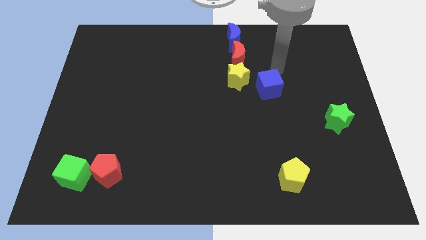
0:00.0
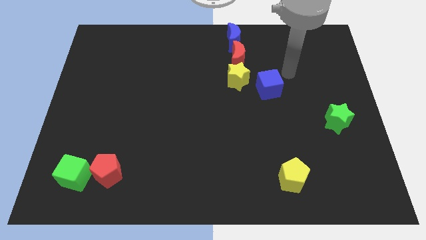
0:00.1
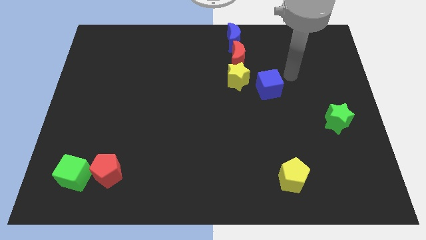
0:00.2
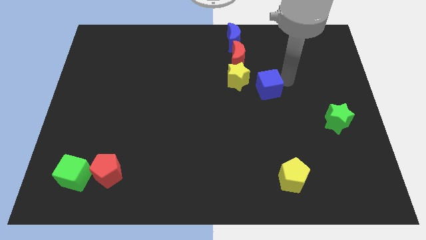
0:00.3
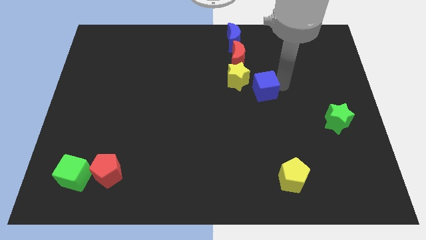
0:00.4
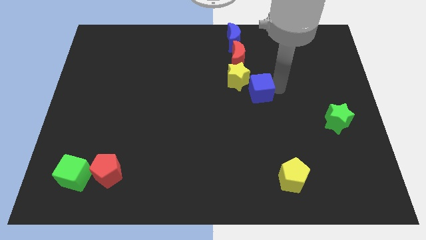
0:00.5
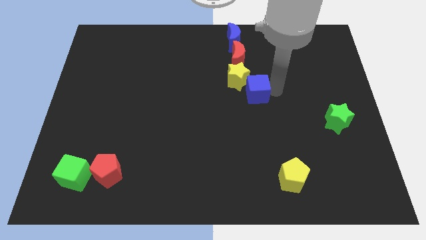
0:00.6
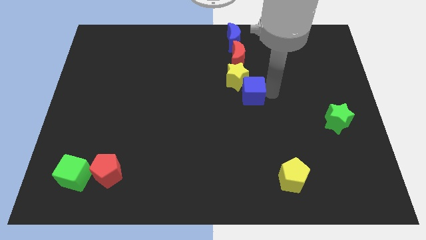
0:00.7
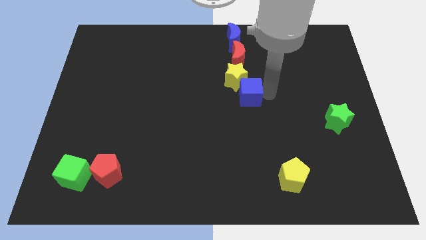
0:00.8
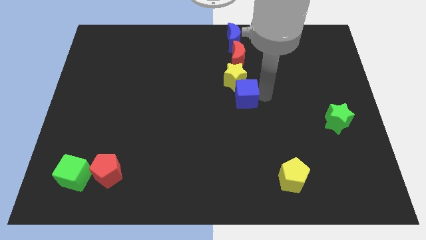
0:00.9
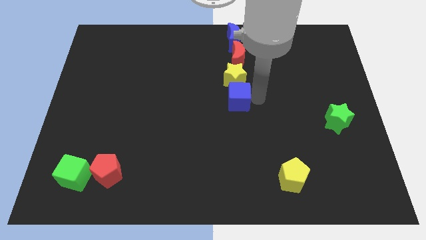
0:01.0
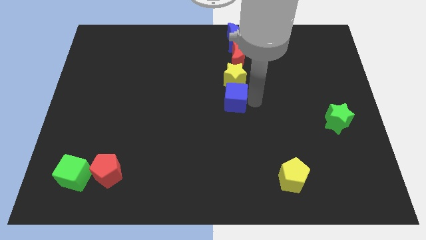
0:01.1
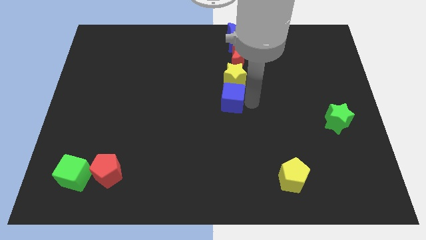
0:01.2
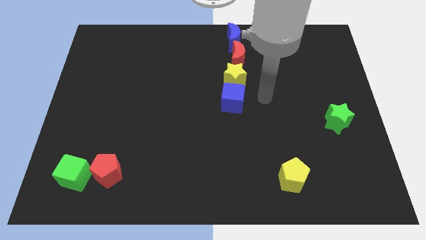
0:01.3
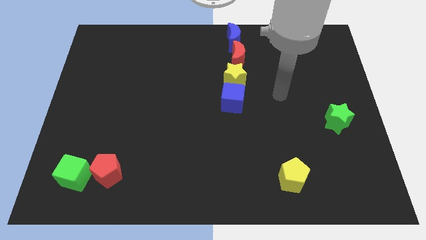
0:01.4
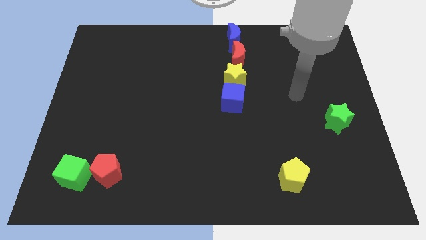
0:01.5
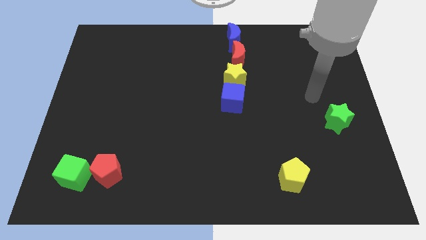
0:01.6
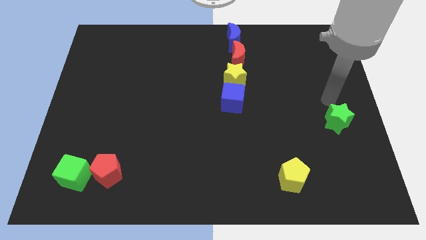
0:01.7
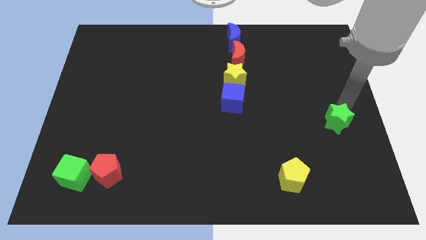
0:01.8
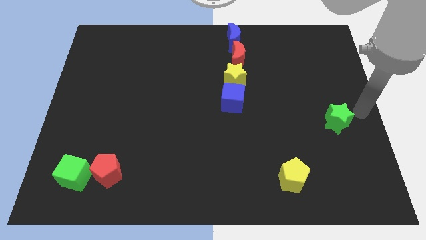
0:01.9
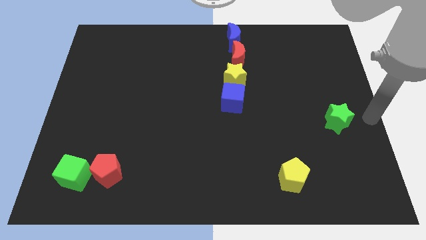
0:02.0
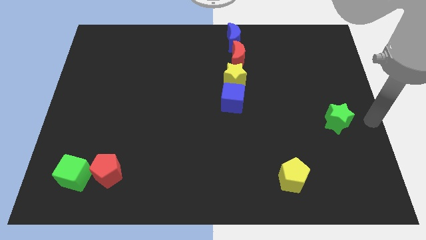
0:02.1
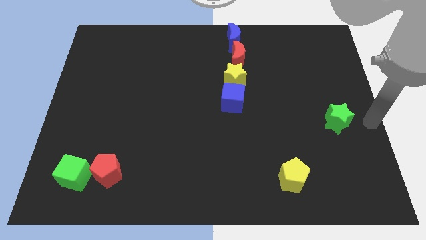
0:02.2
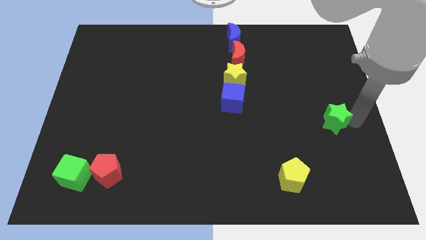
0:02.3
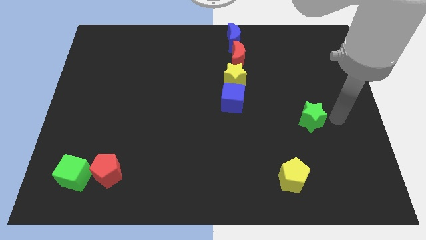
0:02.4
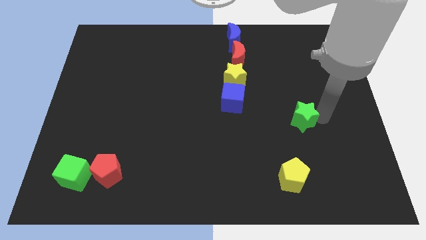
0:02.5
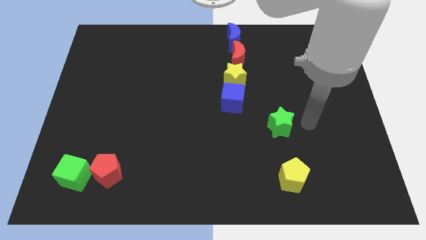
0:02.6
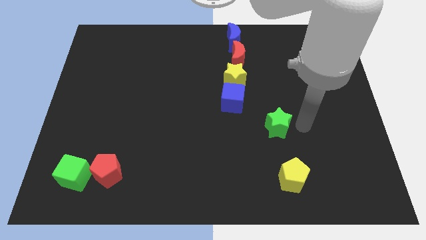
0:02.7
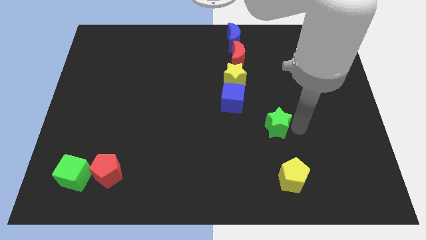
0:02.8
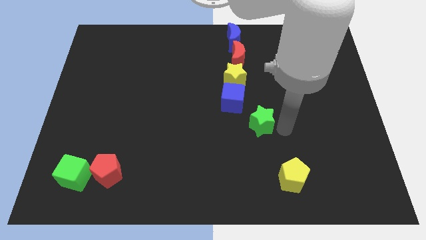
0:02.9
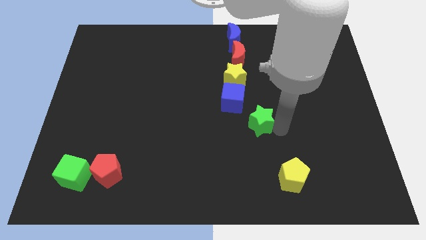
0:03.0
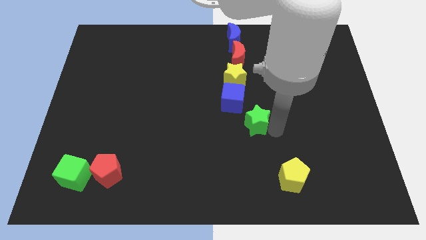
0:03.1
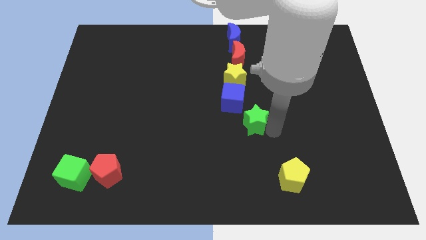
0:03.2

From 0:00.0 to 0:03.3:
place the blue cube to the bottom of the yellow star to the center of the board

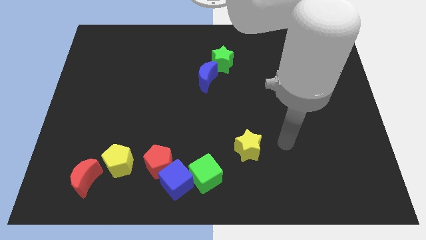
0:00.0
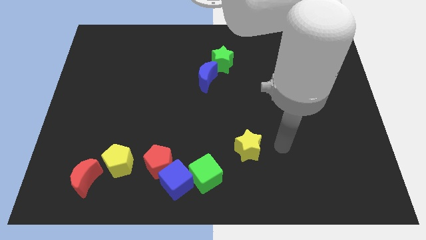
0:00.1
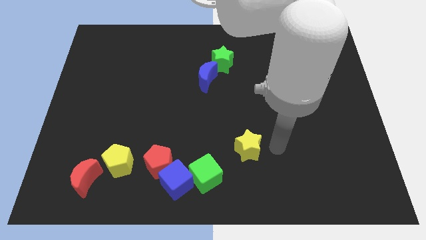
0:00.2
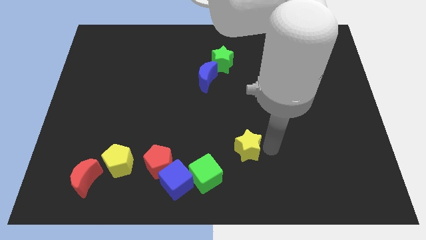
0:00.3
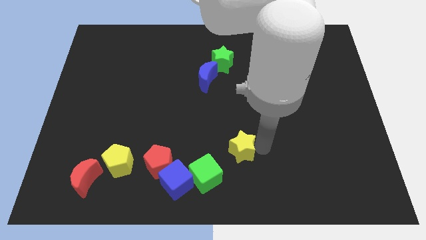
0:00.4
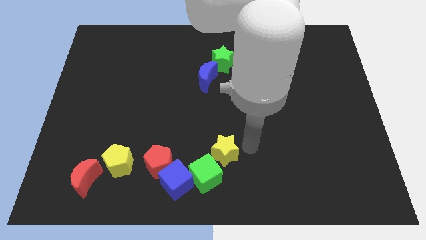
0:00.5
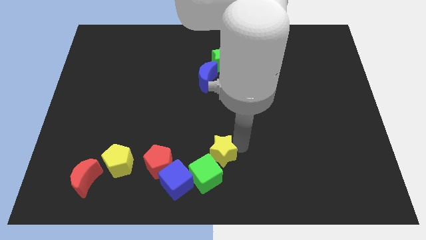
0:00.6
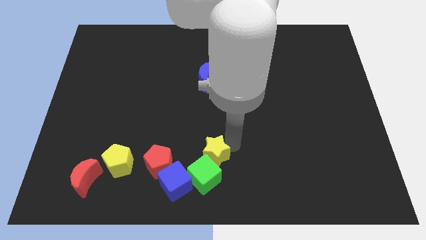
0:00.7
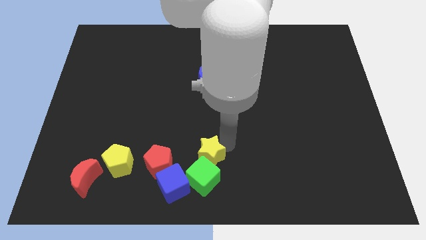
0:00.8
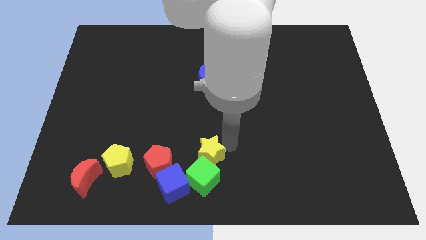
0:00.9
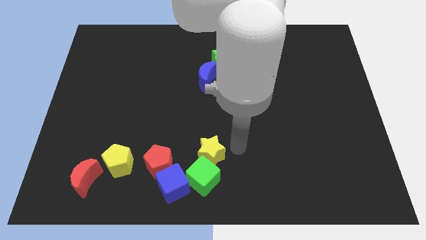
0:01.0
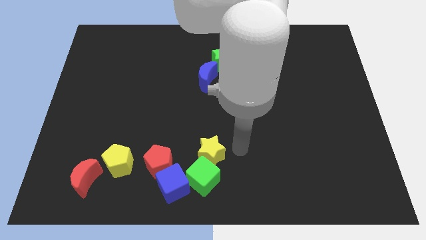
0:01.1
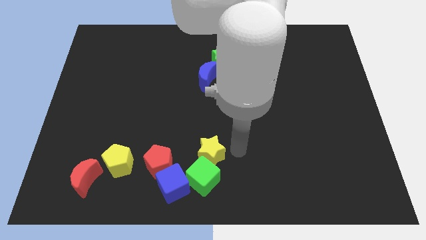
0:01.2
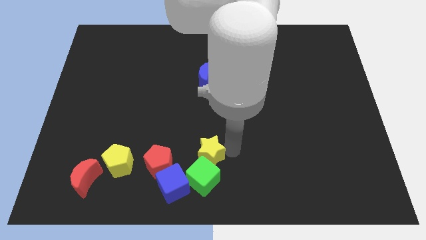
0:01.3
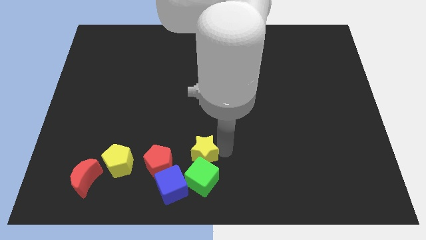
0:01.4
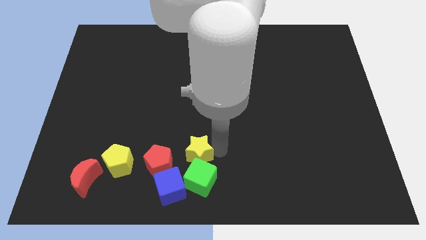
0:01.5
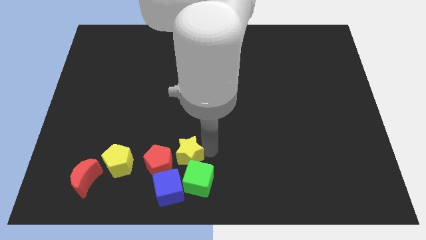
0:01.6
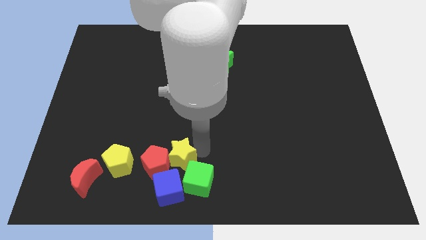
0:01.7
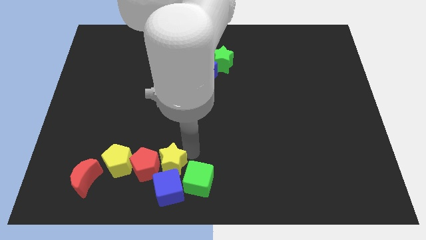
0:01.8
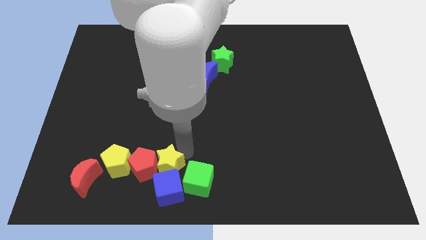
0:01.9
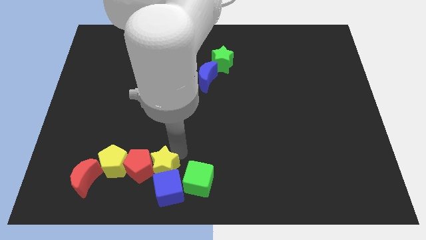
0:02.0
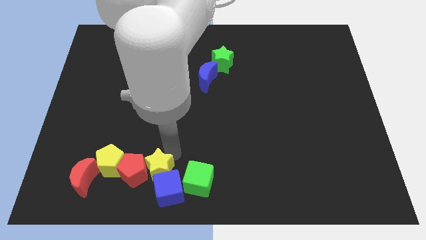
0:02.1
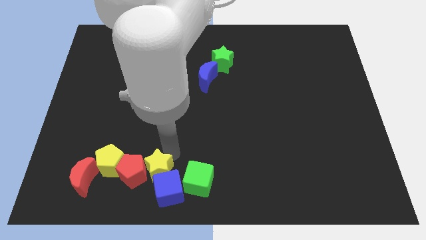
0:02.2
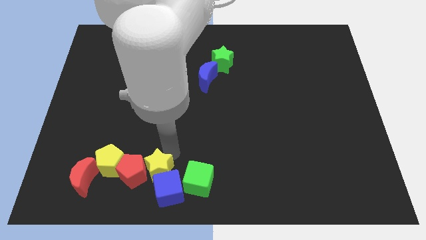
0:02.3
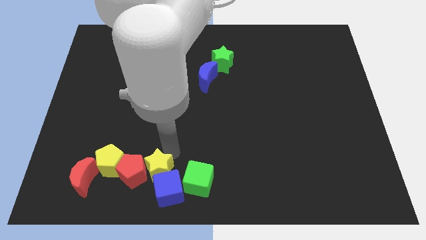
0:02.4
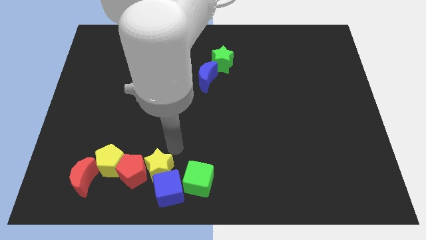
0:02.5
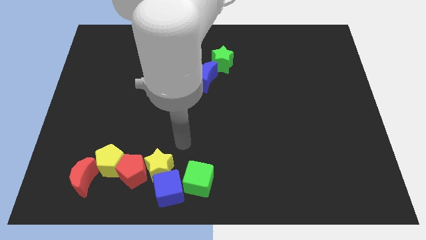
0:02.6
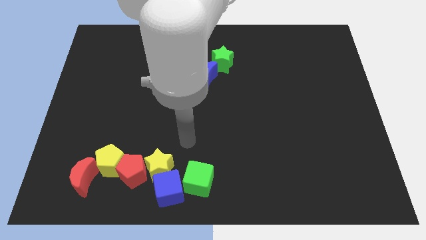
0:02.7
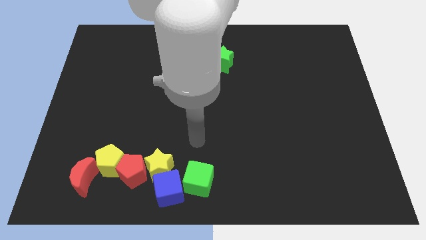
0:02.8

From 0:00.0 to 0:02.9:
push the yellow star into the red pentagon

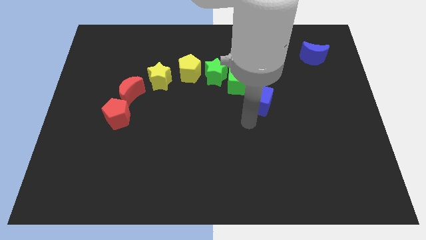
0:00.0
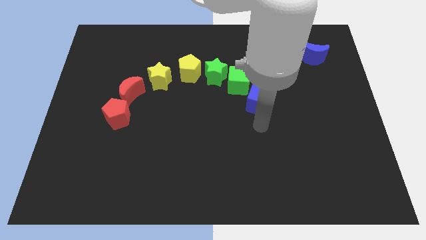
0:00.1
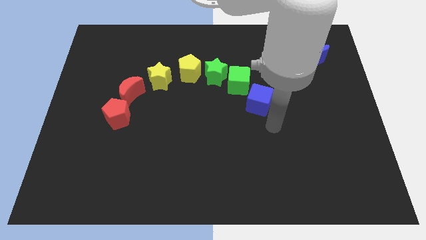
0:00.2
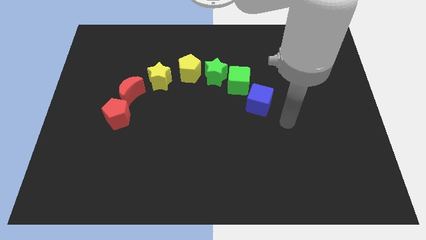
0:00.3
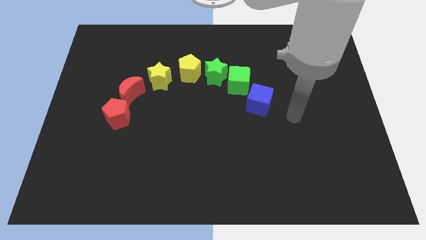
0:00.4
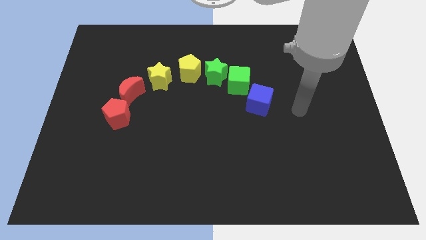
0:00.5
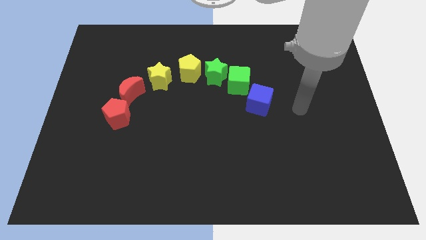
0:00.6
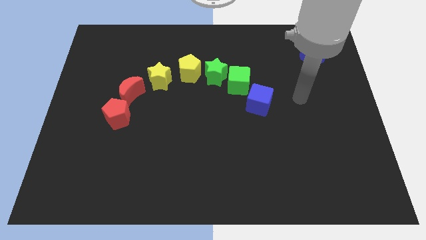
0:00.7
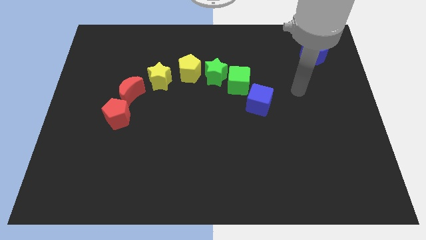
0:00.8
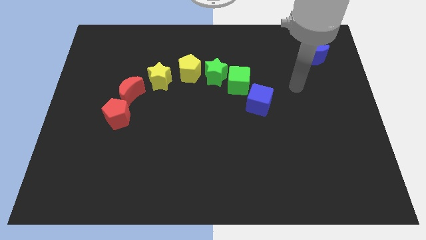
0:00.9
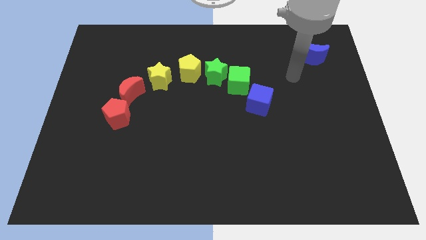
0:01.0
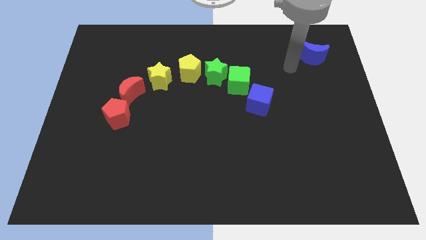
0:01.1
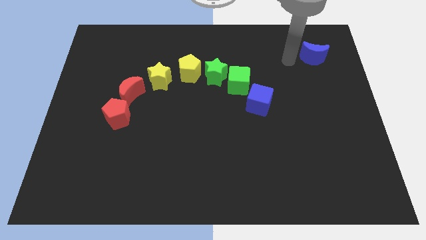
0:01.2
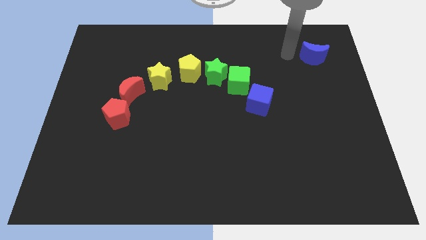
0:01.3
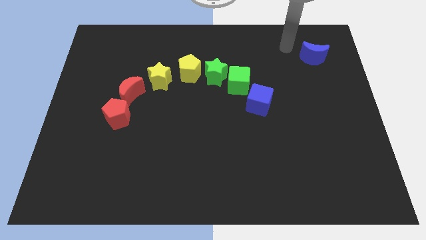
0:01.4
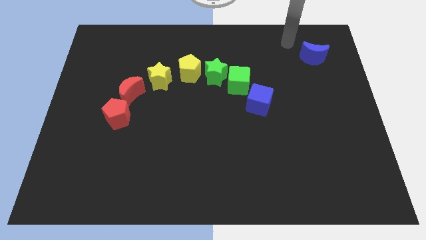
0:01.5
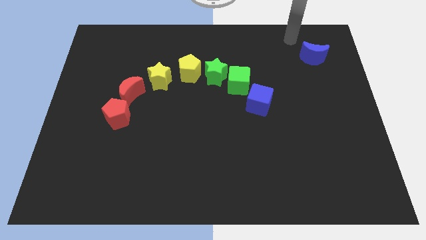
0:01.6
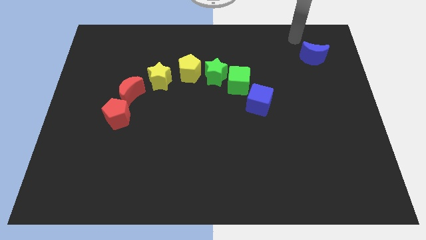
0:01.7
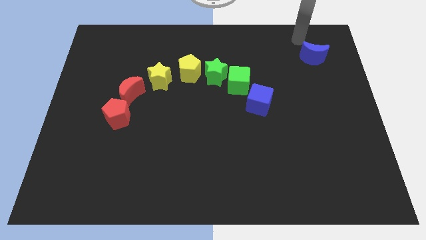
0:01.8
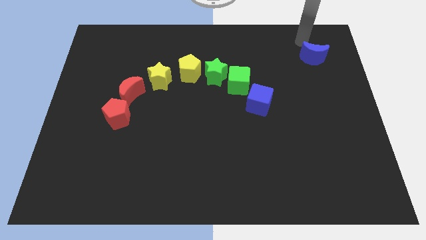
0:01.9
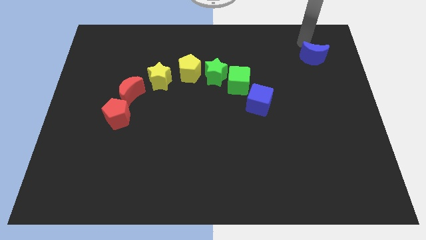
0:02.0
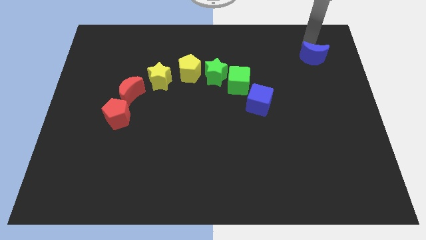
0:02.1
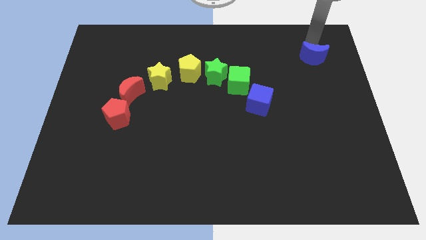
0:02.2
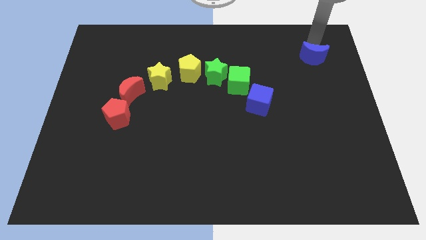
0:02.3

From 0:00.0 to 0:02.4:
place the arm above the blue moon

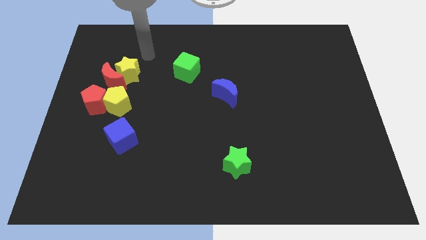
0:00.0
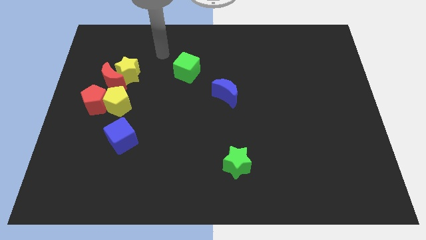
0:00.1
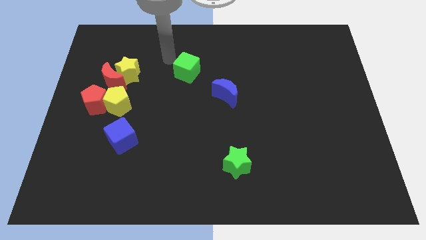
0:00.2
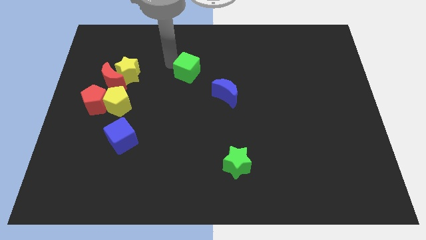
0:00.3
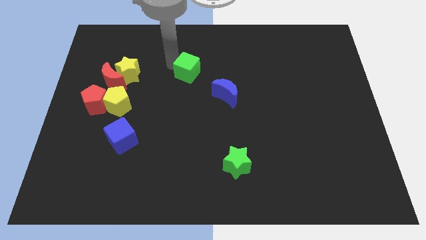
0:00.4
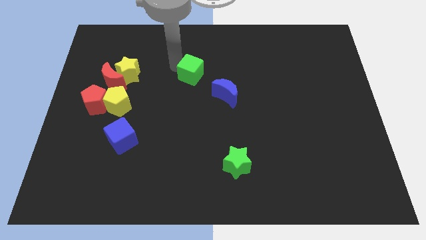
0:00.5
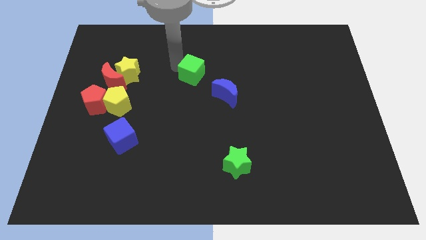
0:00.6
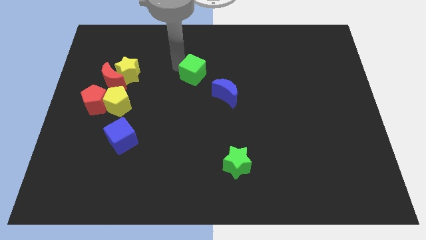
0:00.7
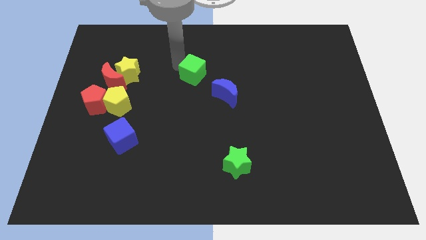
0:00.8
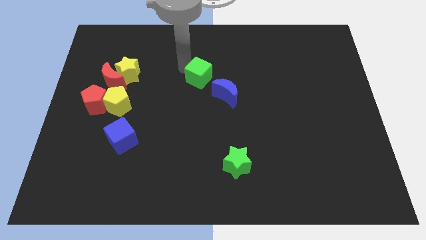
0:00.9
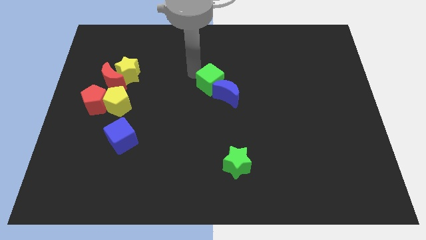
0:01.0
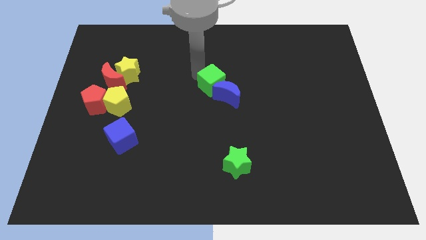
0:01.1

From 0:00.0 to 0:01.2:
move the green cube towards the blue crescent
